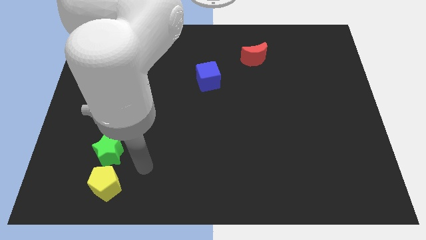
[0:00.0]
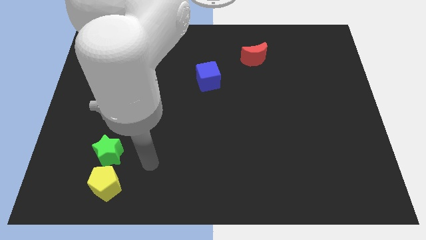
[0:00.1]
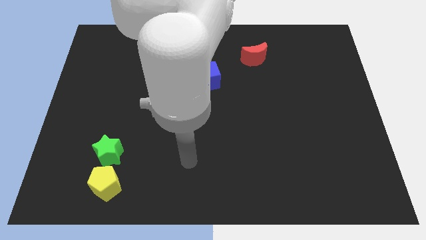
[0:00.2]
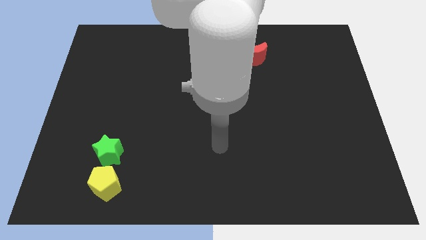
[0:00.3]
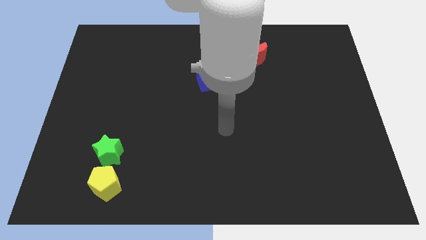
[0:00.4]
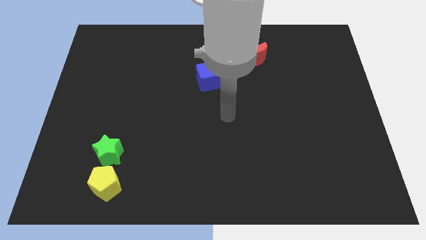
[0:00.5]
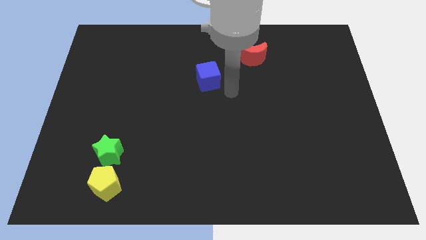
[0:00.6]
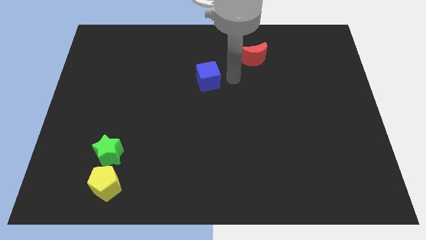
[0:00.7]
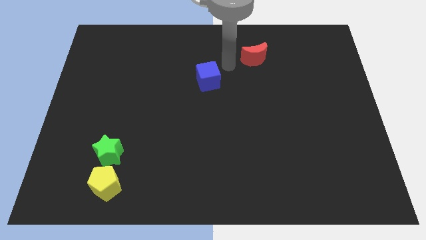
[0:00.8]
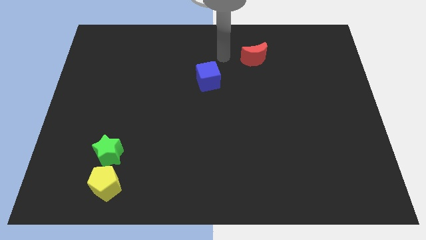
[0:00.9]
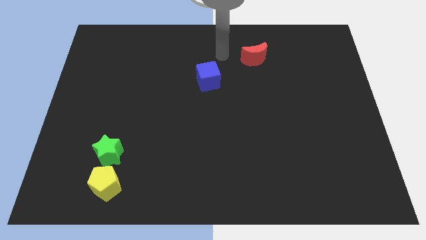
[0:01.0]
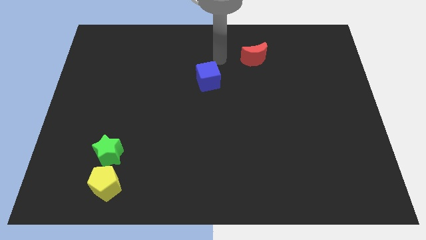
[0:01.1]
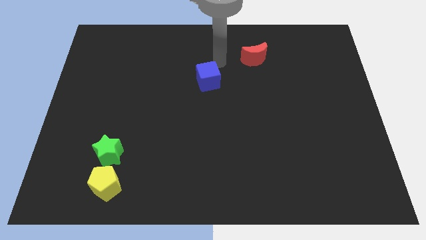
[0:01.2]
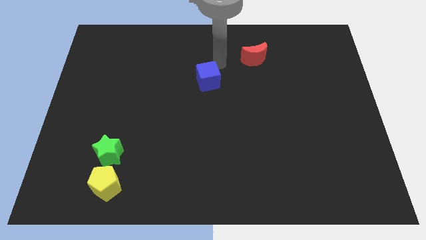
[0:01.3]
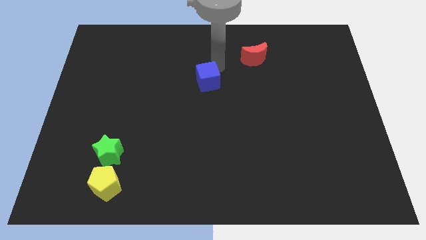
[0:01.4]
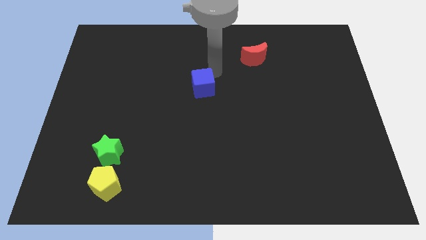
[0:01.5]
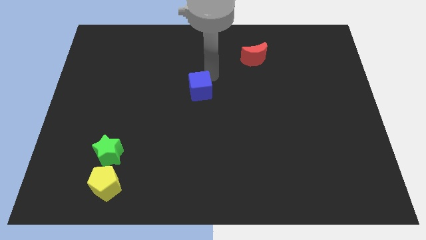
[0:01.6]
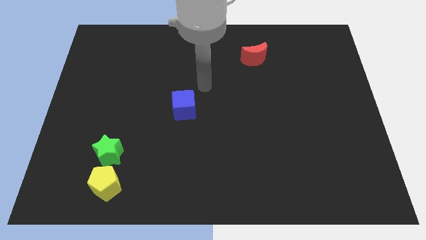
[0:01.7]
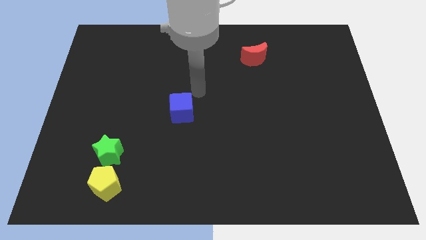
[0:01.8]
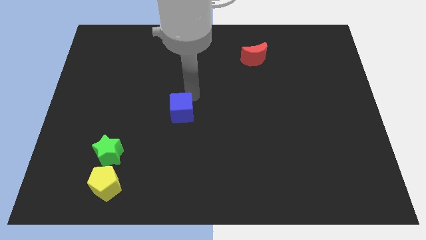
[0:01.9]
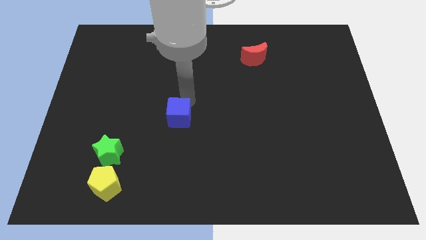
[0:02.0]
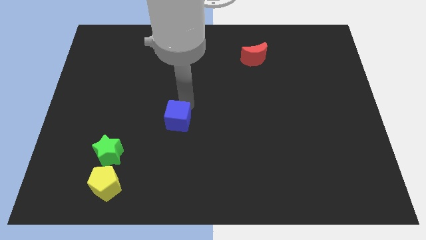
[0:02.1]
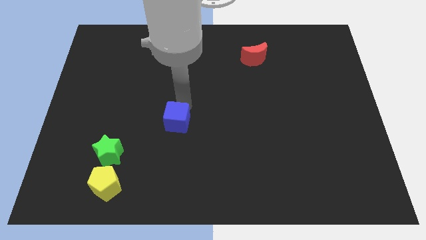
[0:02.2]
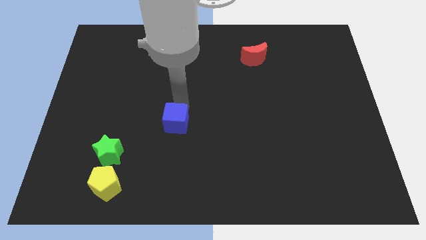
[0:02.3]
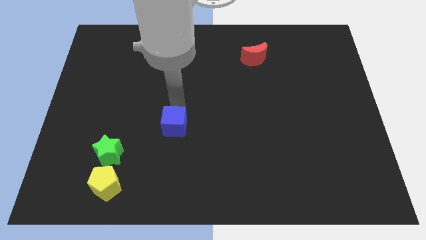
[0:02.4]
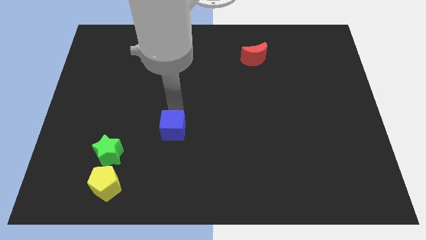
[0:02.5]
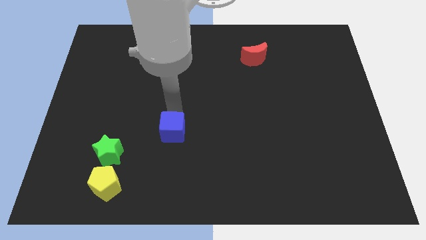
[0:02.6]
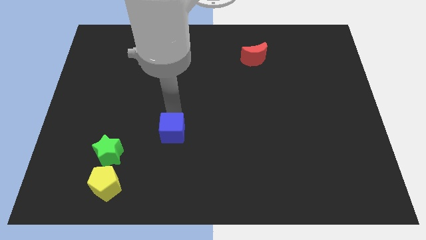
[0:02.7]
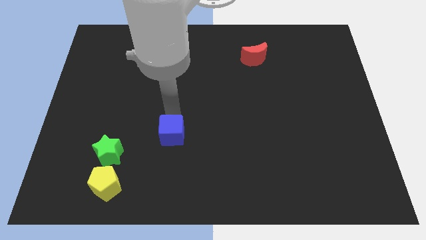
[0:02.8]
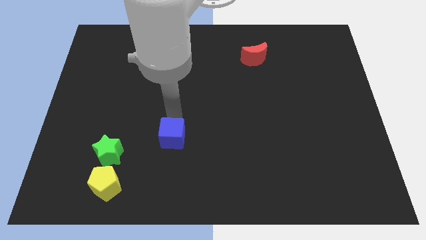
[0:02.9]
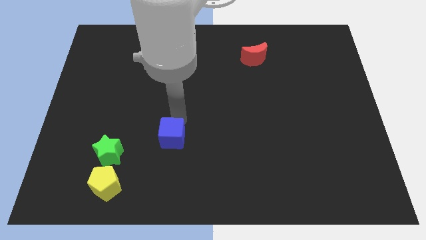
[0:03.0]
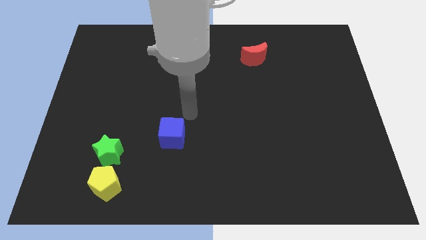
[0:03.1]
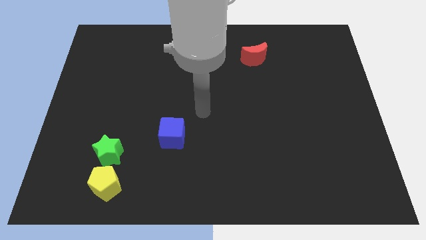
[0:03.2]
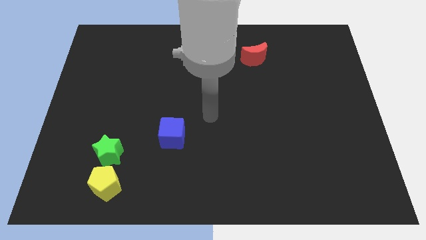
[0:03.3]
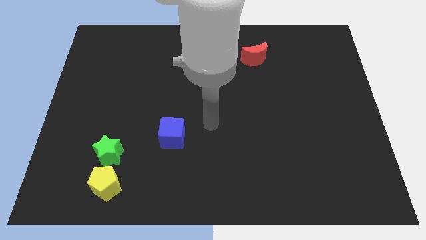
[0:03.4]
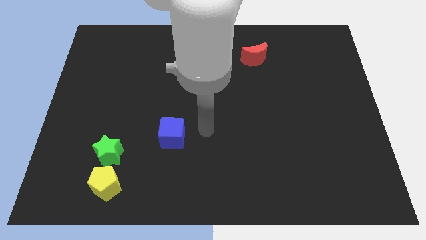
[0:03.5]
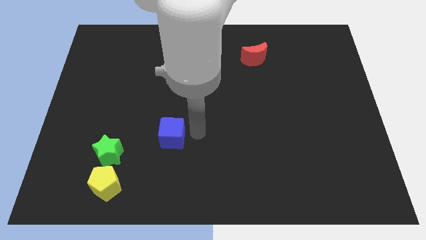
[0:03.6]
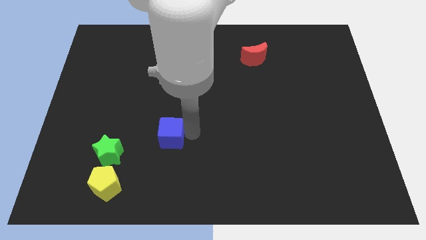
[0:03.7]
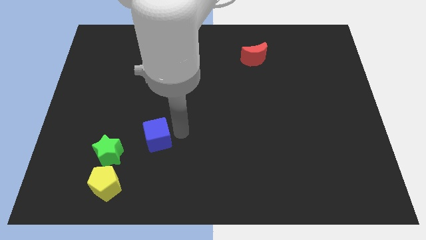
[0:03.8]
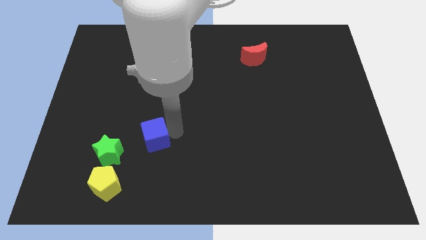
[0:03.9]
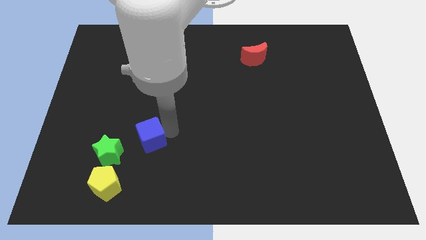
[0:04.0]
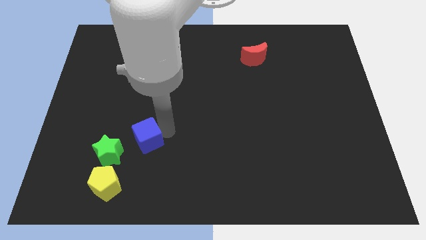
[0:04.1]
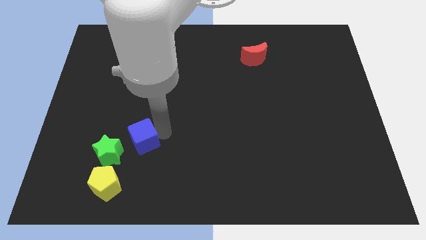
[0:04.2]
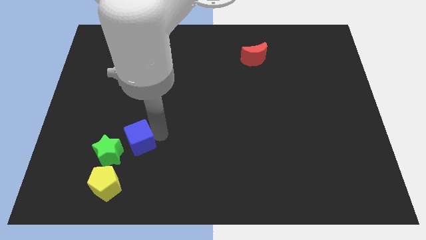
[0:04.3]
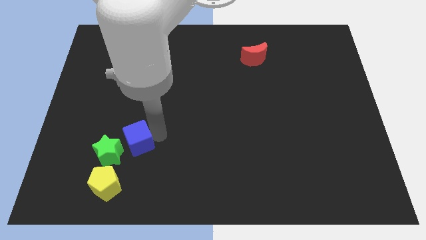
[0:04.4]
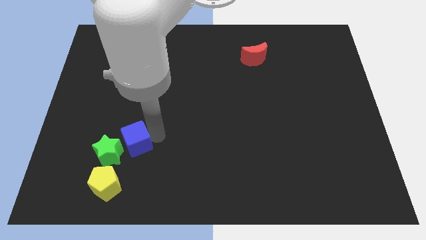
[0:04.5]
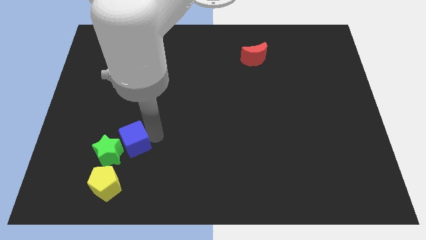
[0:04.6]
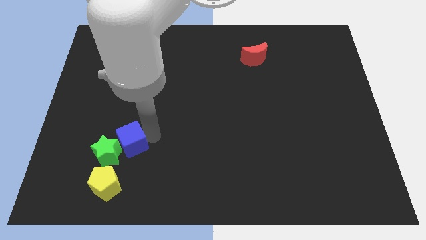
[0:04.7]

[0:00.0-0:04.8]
slide the blue block towards the star

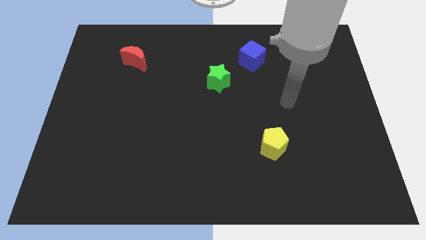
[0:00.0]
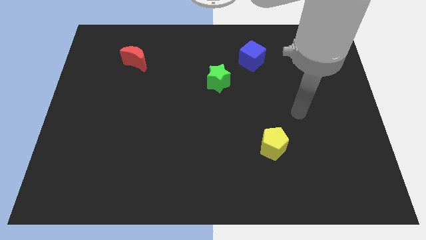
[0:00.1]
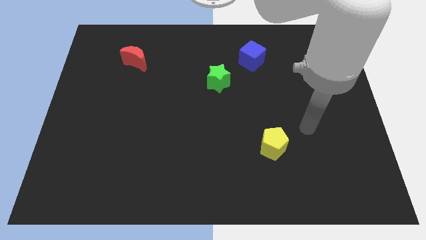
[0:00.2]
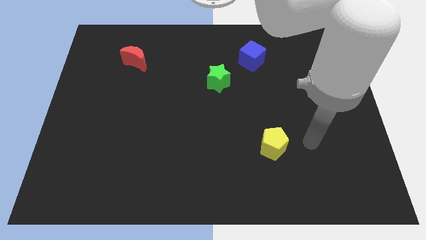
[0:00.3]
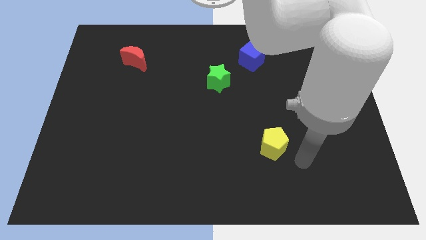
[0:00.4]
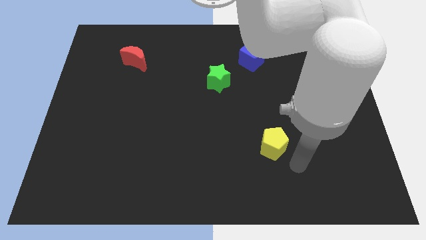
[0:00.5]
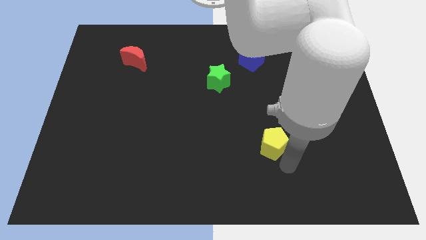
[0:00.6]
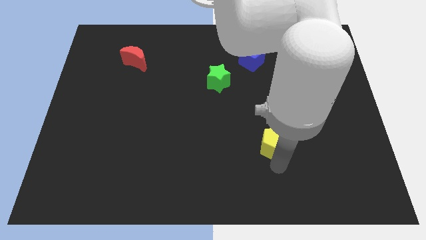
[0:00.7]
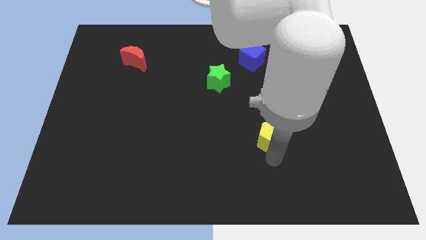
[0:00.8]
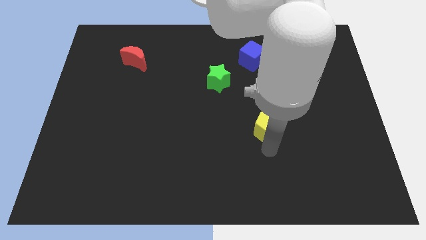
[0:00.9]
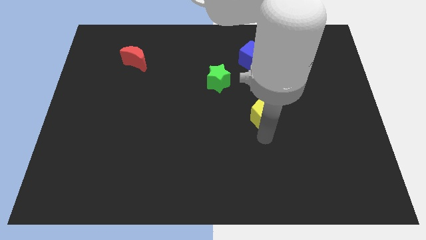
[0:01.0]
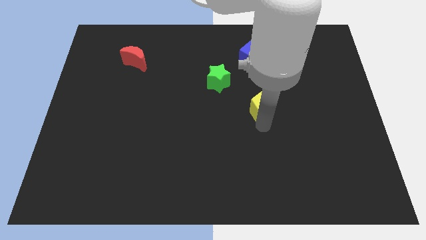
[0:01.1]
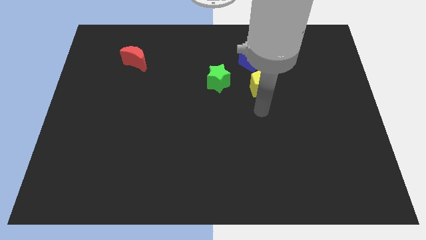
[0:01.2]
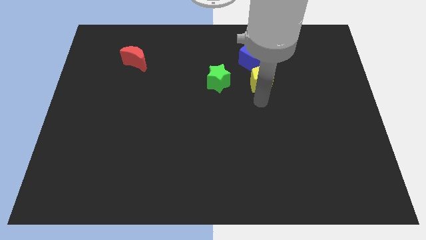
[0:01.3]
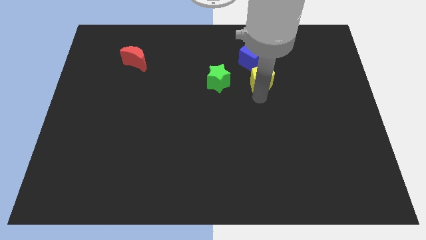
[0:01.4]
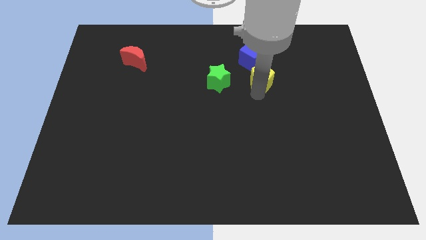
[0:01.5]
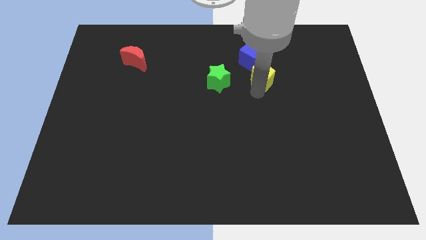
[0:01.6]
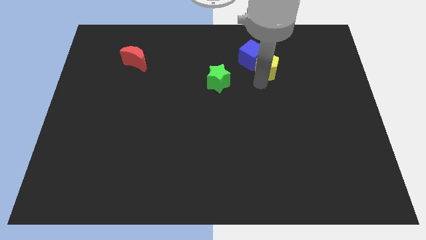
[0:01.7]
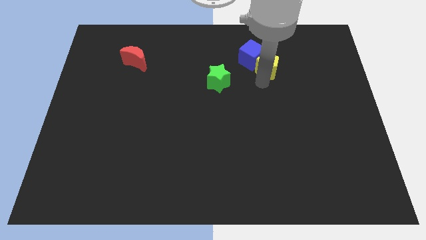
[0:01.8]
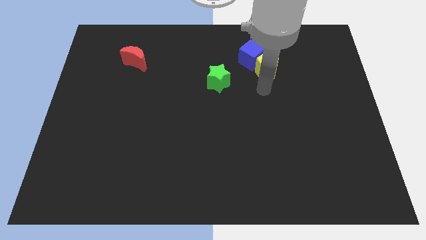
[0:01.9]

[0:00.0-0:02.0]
slide the yellow block close to the cube

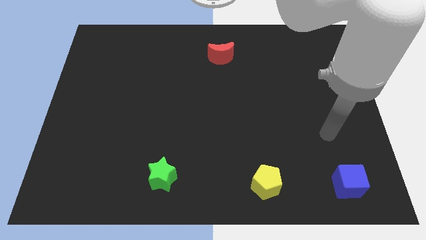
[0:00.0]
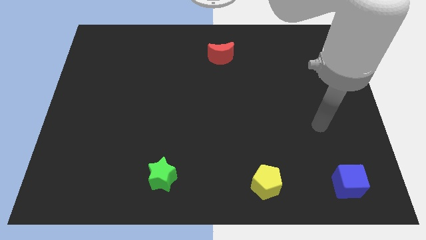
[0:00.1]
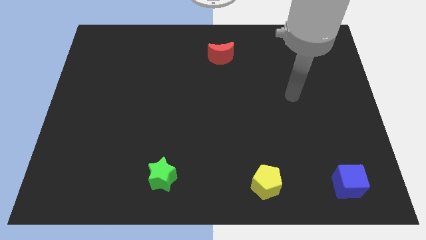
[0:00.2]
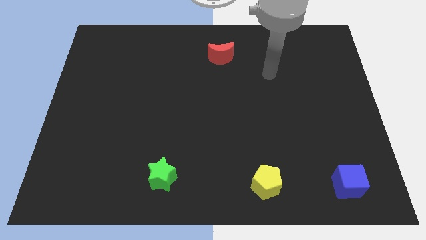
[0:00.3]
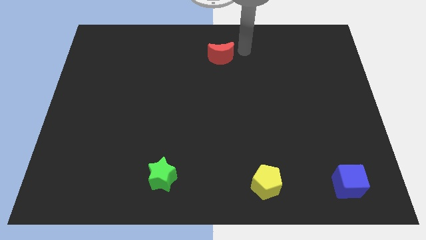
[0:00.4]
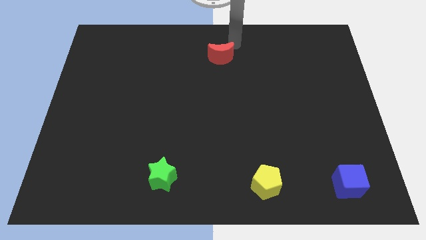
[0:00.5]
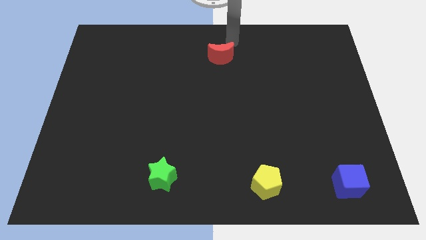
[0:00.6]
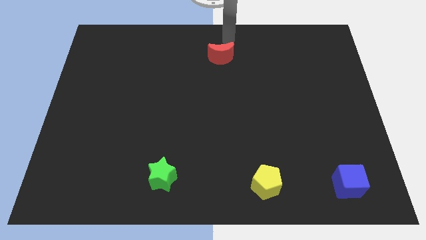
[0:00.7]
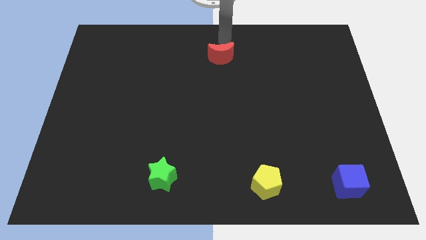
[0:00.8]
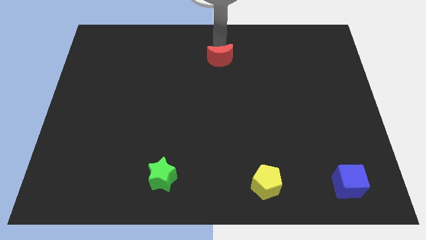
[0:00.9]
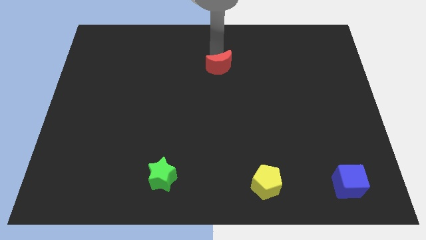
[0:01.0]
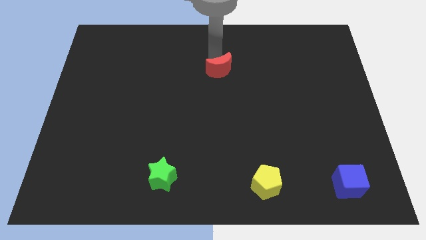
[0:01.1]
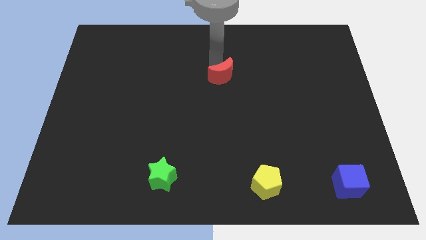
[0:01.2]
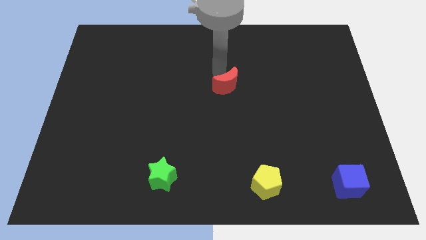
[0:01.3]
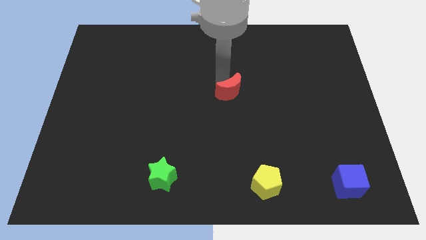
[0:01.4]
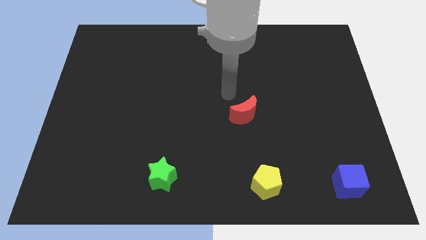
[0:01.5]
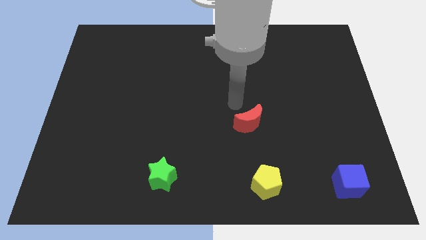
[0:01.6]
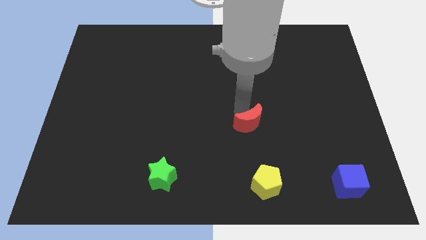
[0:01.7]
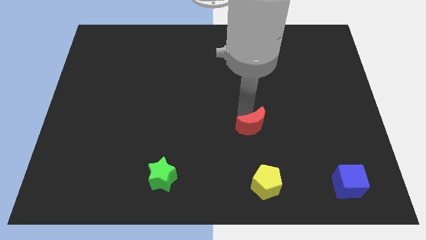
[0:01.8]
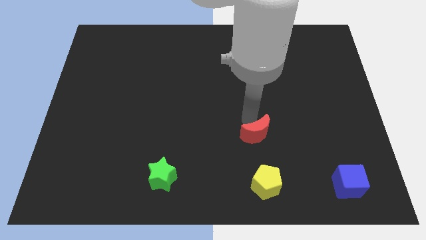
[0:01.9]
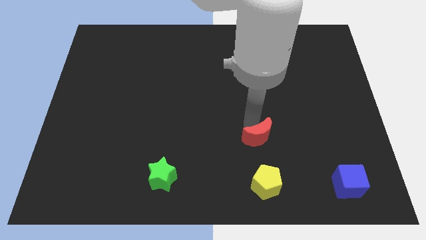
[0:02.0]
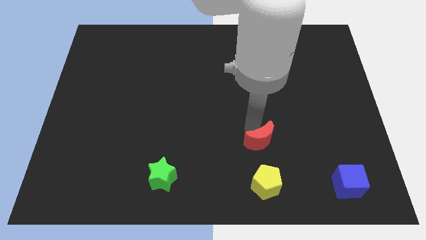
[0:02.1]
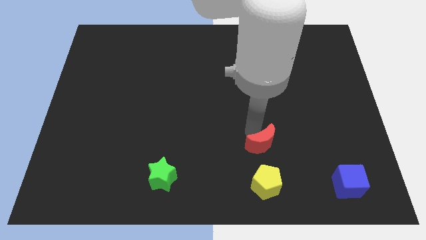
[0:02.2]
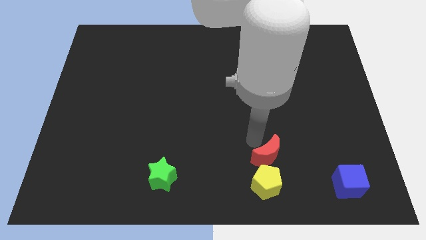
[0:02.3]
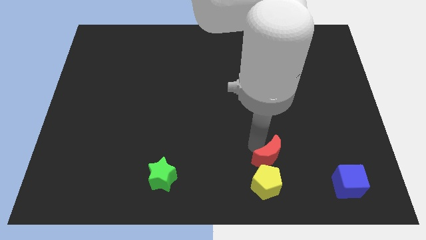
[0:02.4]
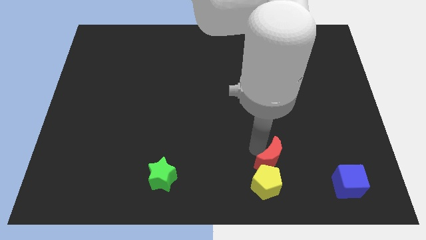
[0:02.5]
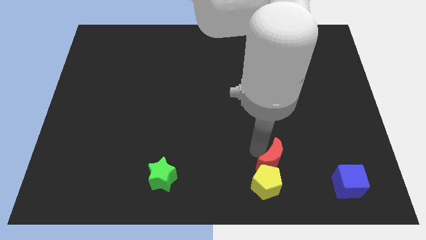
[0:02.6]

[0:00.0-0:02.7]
put the moon next to the yellow pentagon
